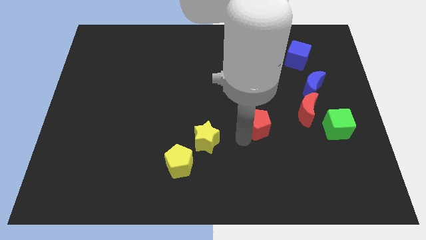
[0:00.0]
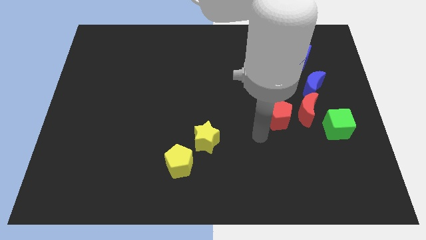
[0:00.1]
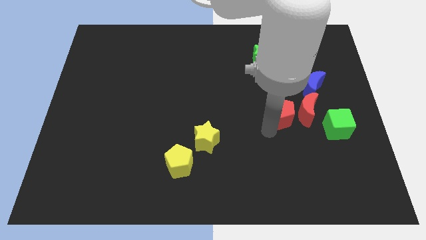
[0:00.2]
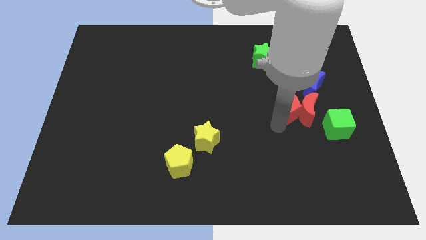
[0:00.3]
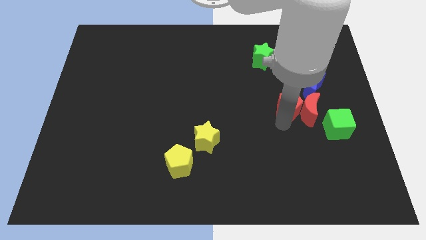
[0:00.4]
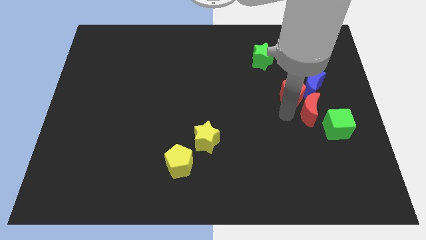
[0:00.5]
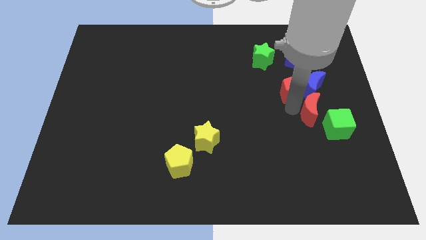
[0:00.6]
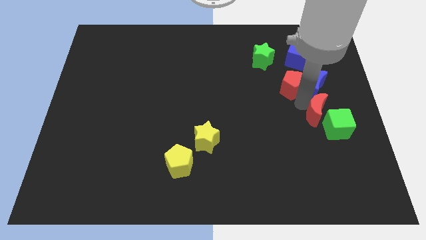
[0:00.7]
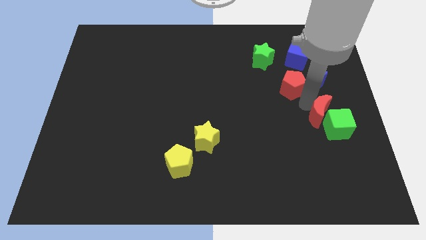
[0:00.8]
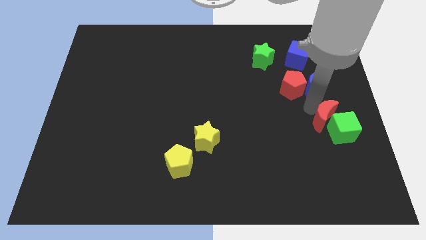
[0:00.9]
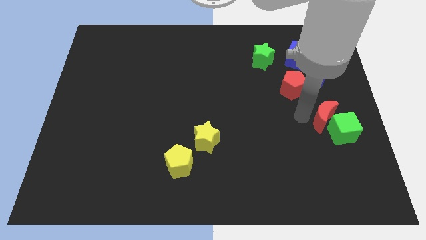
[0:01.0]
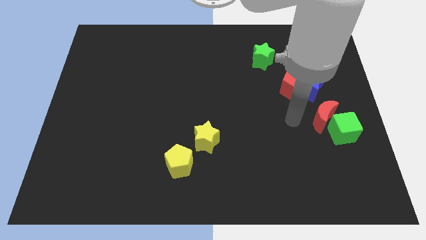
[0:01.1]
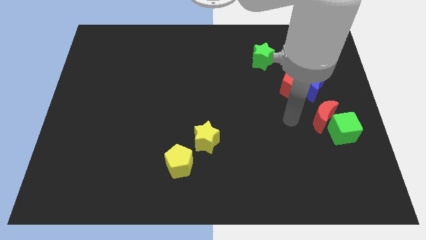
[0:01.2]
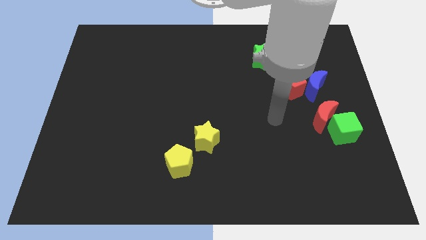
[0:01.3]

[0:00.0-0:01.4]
separate the red blocks

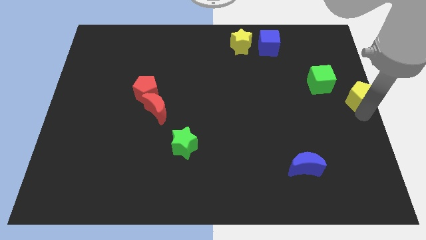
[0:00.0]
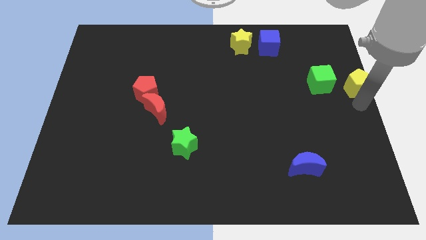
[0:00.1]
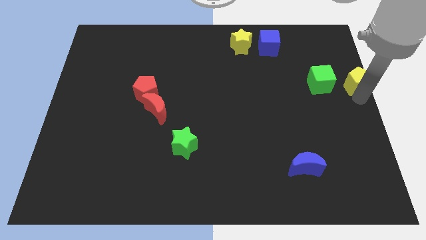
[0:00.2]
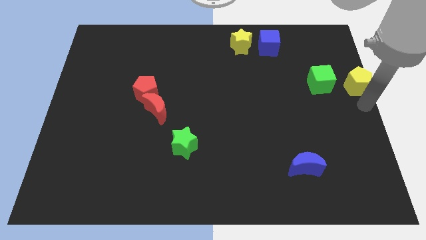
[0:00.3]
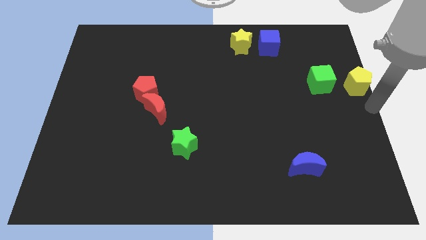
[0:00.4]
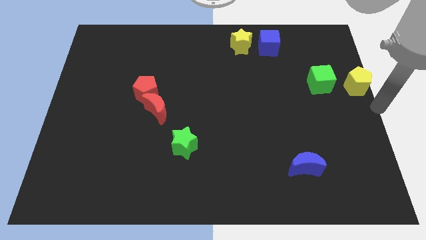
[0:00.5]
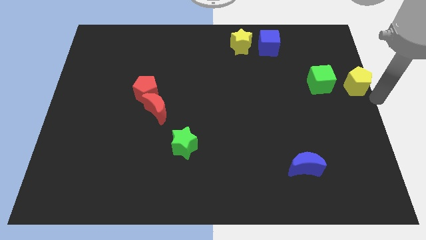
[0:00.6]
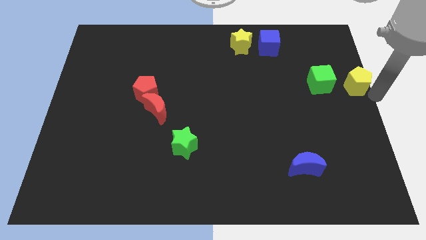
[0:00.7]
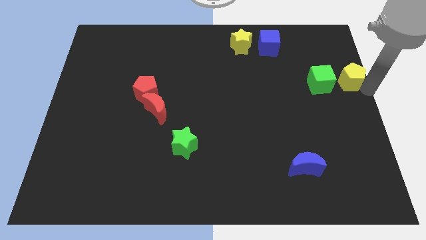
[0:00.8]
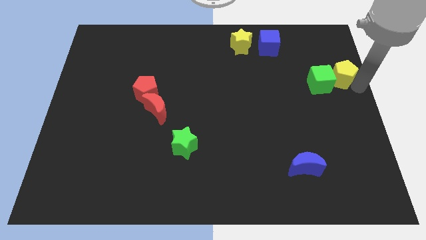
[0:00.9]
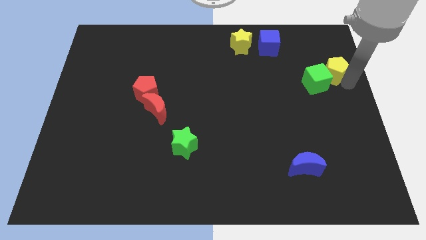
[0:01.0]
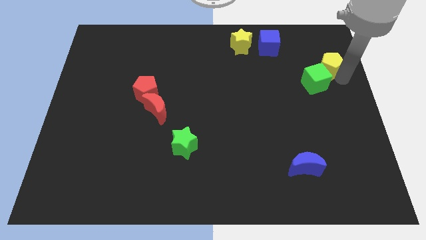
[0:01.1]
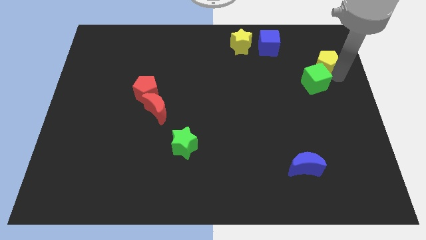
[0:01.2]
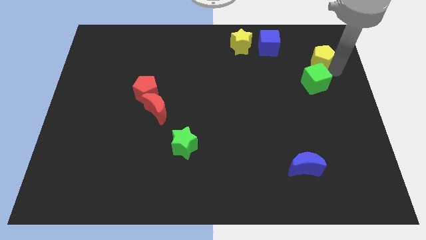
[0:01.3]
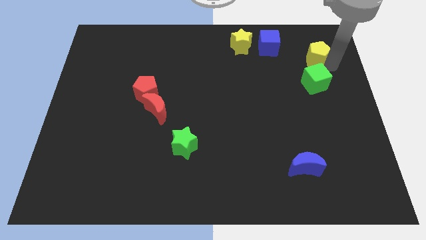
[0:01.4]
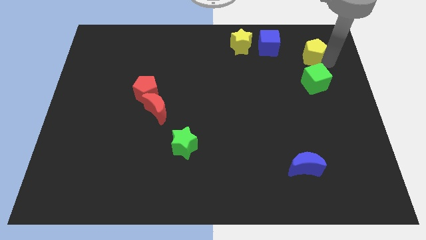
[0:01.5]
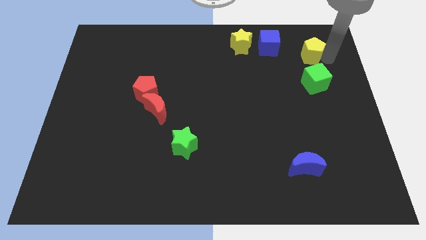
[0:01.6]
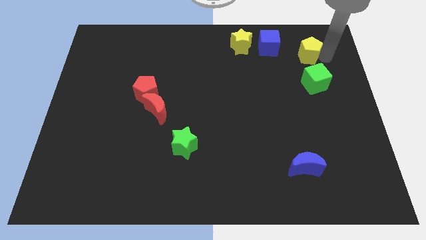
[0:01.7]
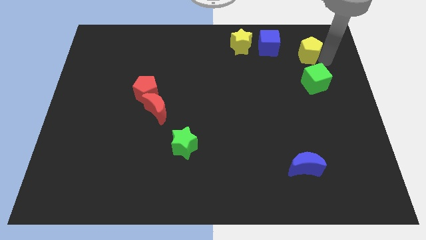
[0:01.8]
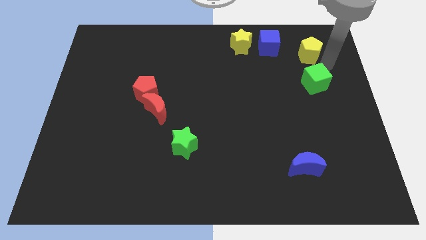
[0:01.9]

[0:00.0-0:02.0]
put the yellow pentagon above the green cube

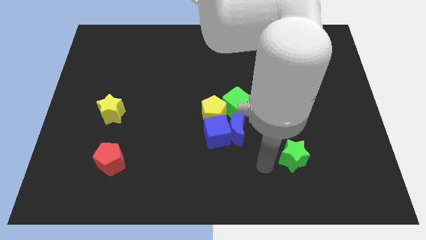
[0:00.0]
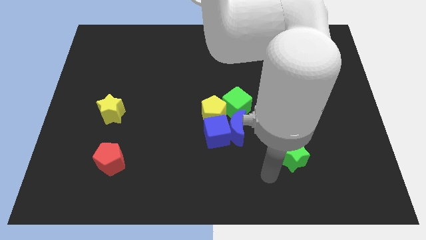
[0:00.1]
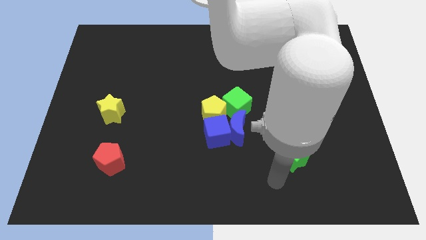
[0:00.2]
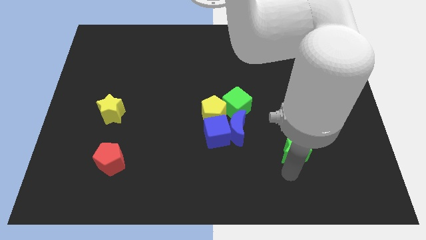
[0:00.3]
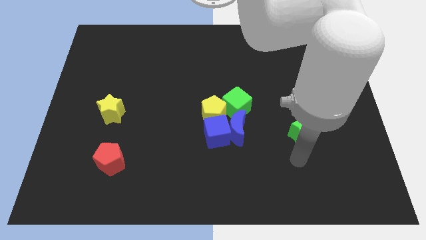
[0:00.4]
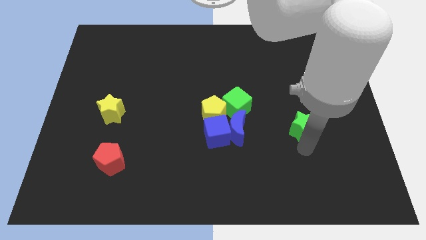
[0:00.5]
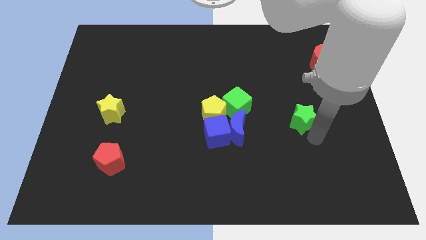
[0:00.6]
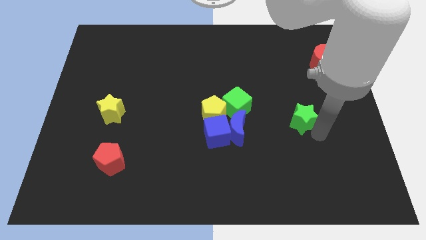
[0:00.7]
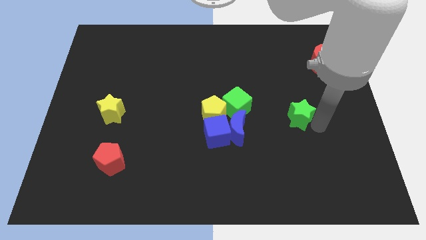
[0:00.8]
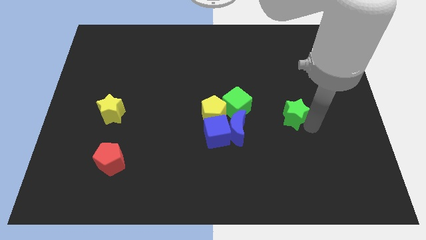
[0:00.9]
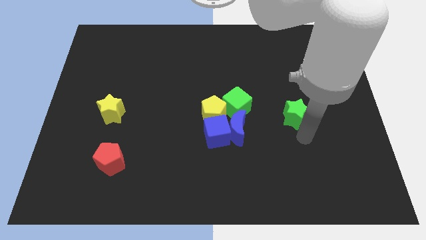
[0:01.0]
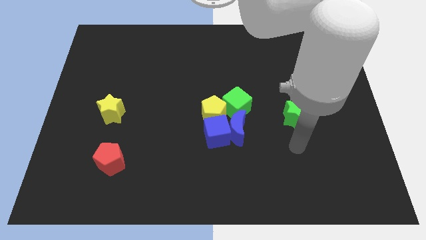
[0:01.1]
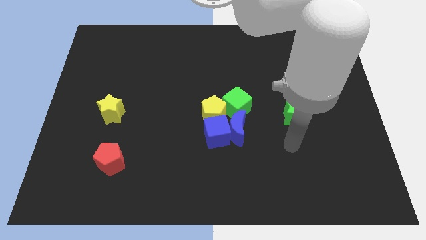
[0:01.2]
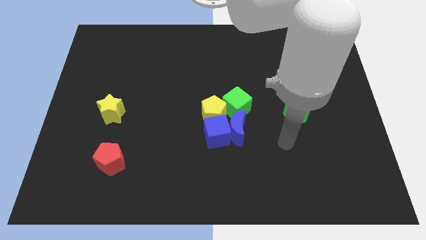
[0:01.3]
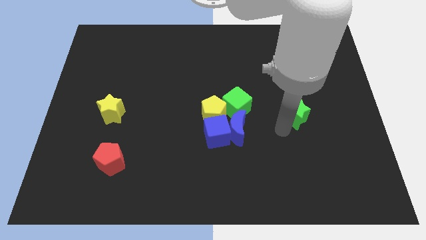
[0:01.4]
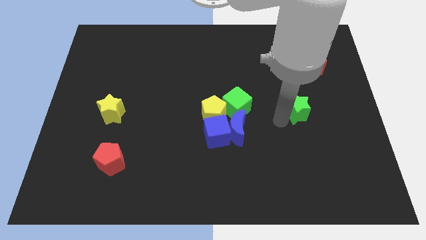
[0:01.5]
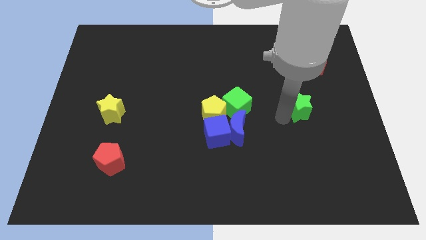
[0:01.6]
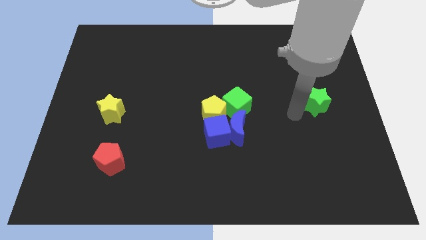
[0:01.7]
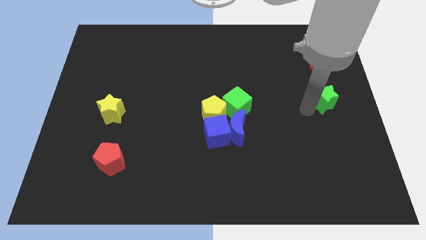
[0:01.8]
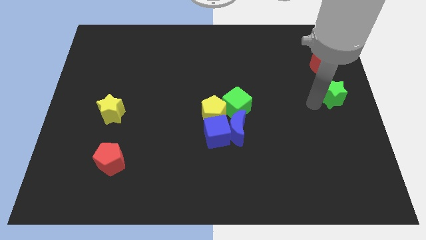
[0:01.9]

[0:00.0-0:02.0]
place the green star below the red moon

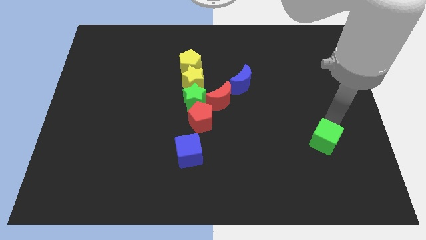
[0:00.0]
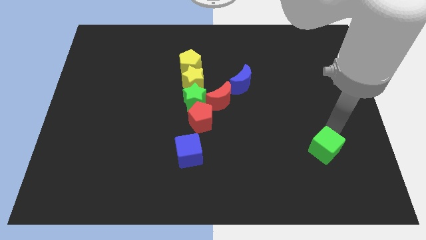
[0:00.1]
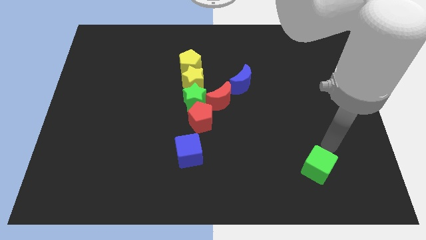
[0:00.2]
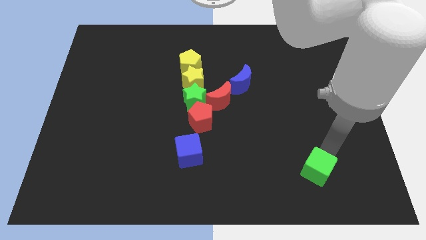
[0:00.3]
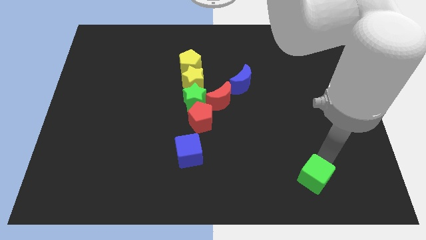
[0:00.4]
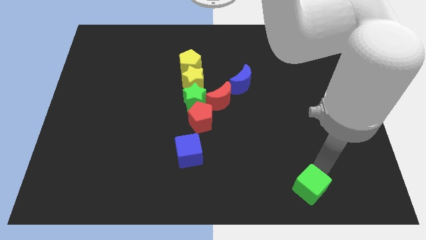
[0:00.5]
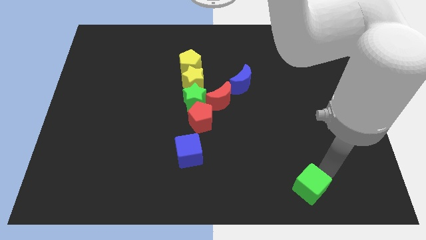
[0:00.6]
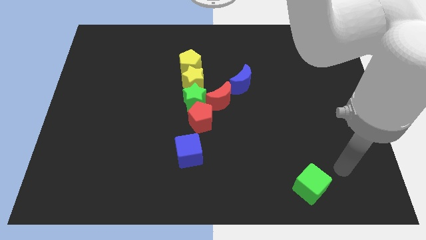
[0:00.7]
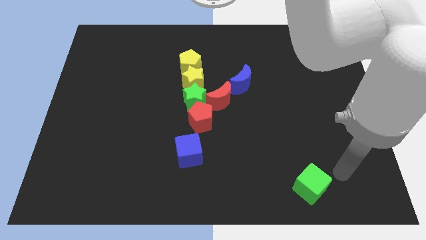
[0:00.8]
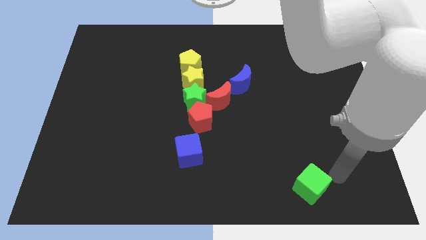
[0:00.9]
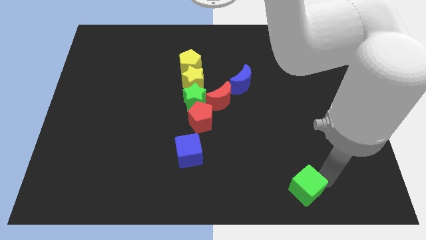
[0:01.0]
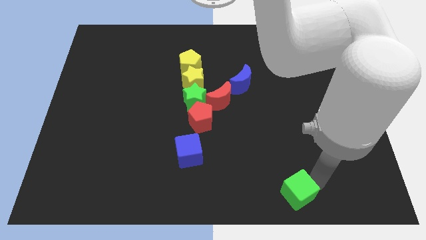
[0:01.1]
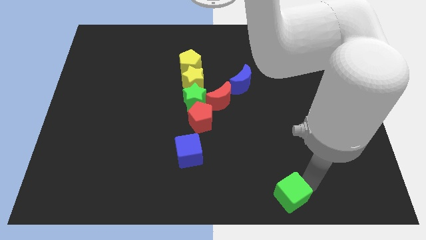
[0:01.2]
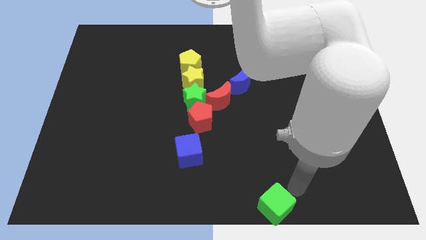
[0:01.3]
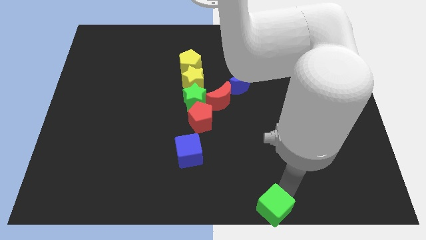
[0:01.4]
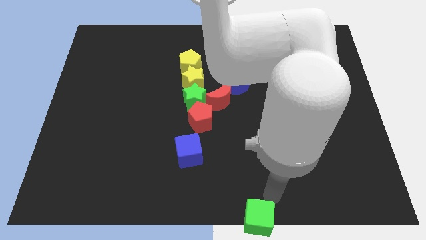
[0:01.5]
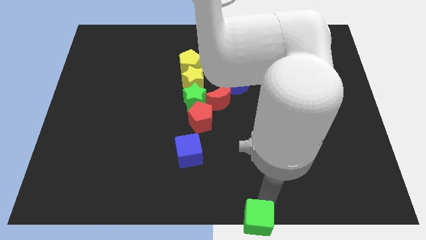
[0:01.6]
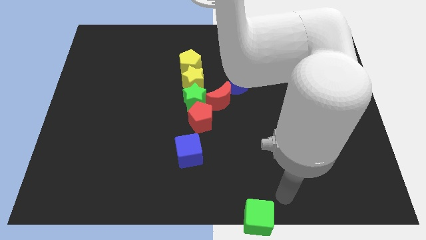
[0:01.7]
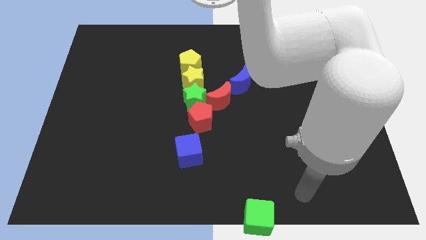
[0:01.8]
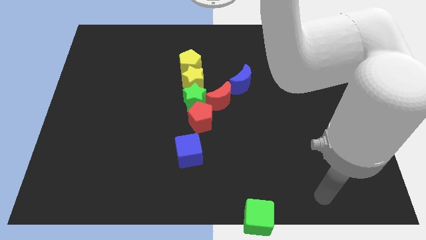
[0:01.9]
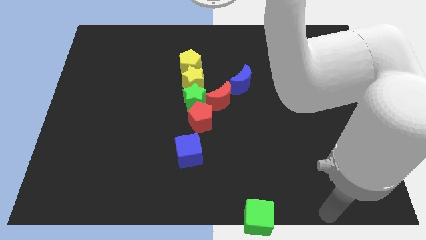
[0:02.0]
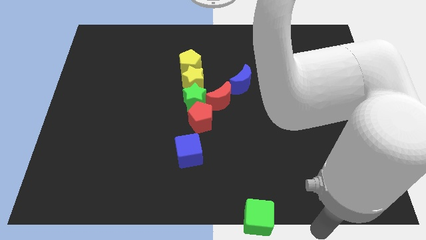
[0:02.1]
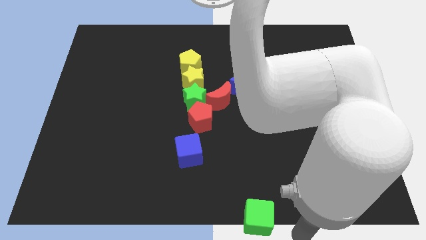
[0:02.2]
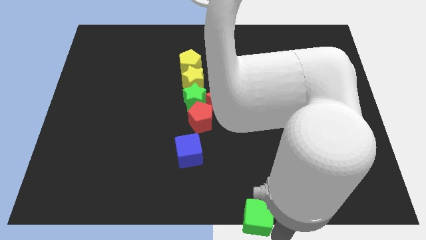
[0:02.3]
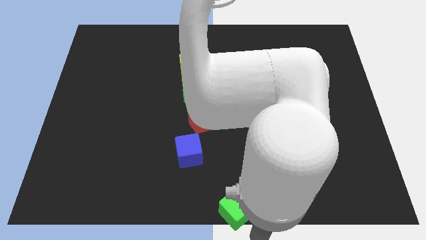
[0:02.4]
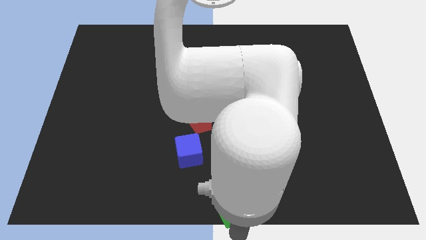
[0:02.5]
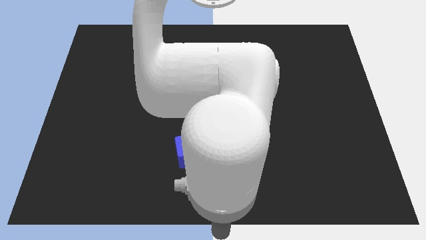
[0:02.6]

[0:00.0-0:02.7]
place the green cube at the bottom center of the board

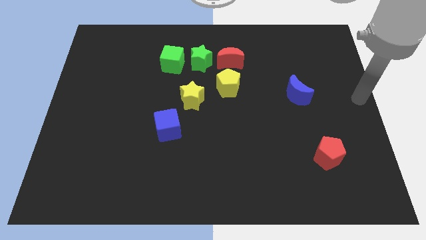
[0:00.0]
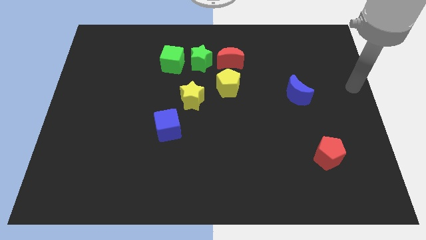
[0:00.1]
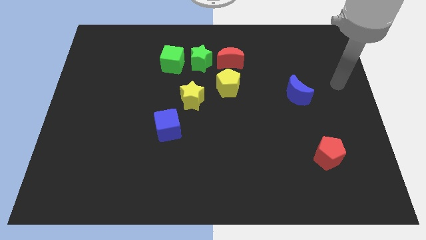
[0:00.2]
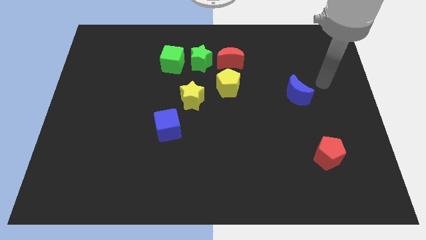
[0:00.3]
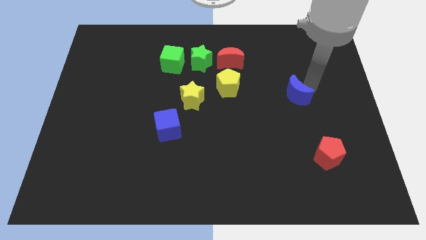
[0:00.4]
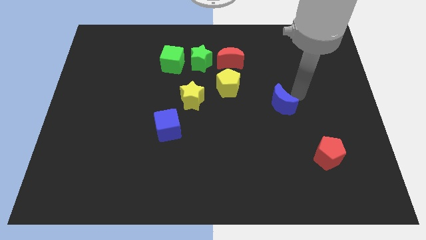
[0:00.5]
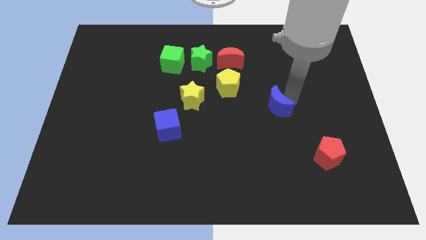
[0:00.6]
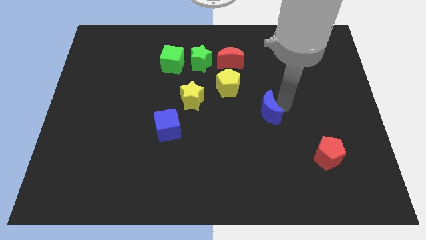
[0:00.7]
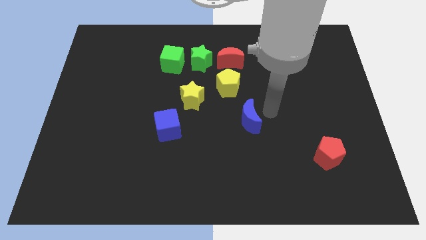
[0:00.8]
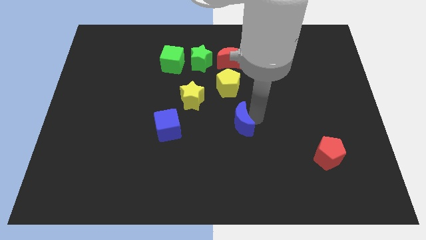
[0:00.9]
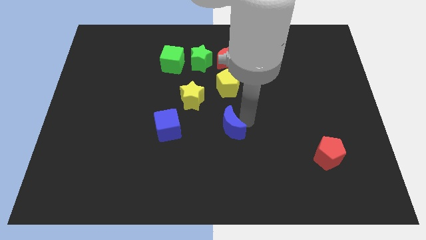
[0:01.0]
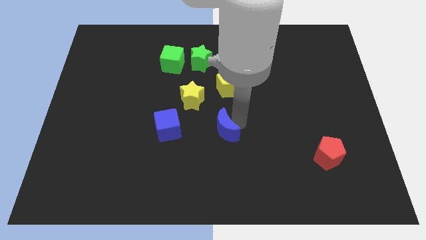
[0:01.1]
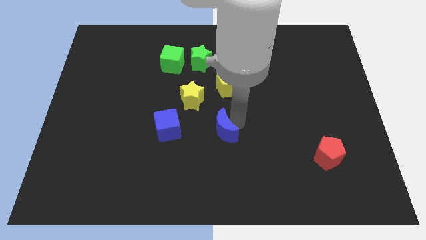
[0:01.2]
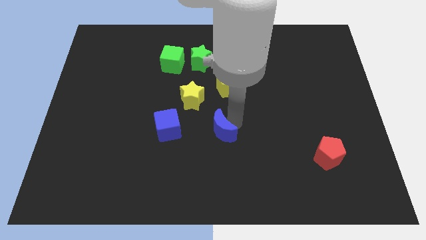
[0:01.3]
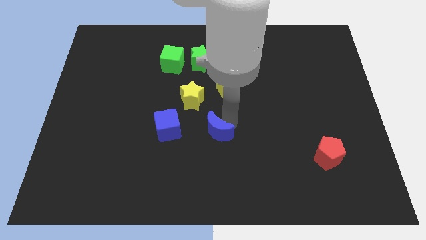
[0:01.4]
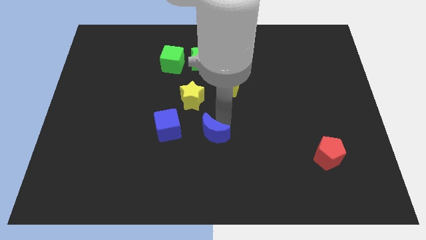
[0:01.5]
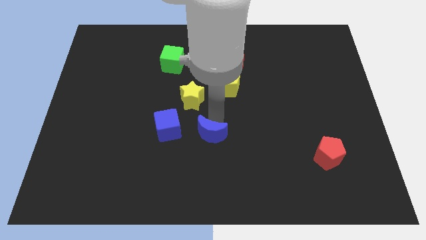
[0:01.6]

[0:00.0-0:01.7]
move the blue moon to the center of the board
